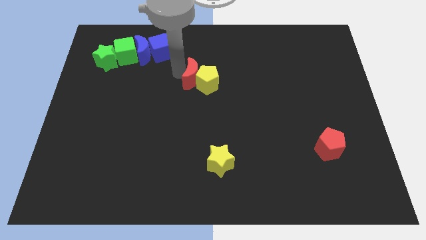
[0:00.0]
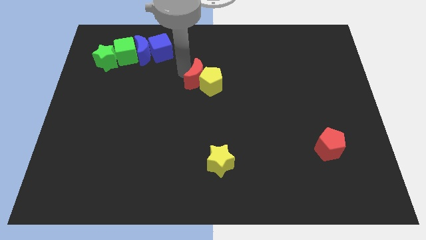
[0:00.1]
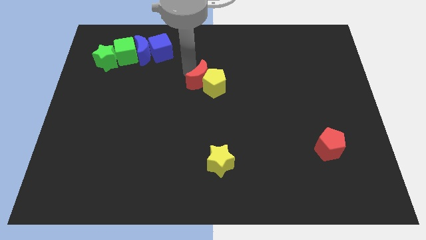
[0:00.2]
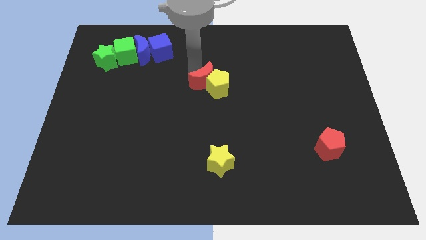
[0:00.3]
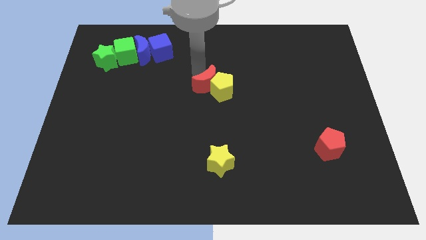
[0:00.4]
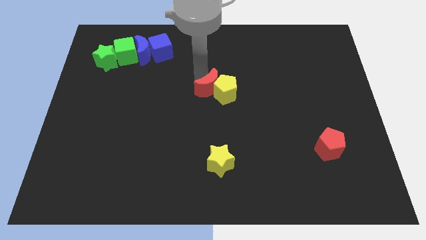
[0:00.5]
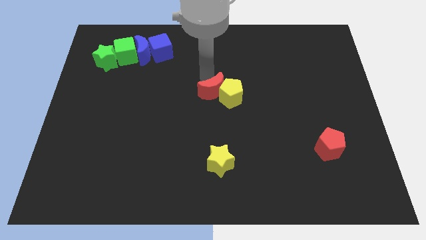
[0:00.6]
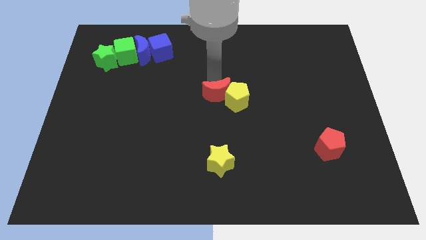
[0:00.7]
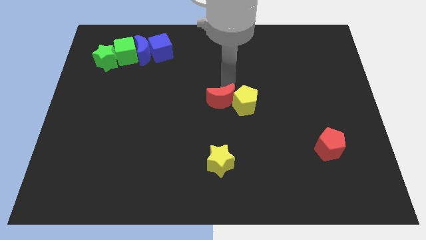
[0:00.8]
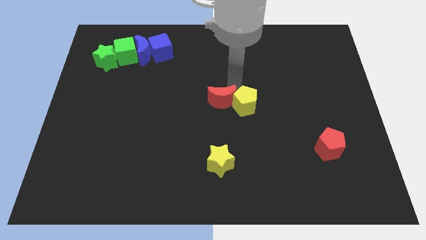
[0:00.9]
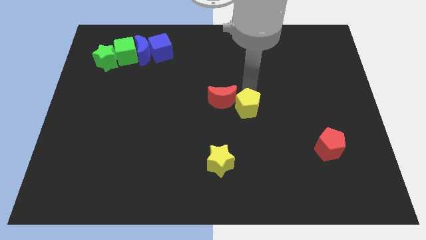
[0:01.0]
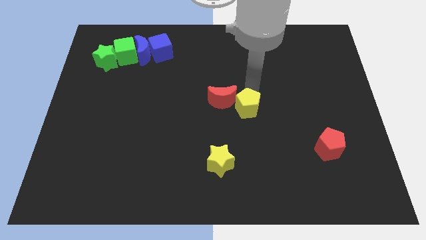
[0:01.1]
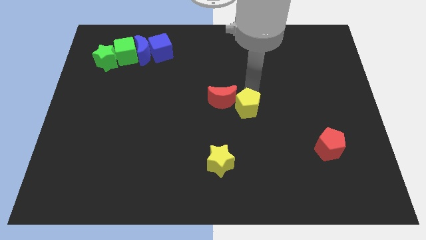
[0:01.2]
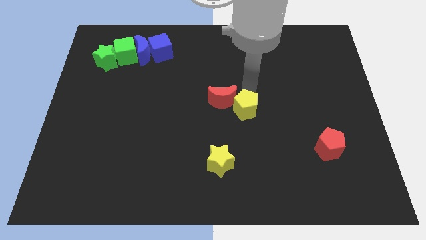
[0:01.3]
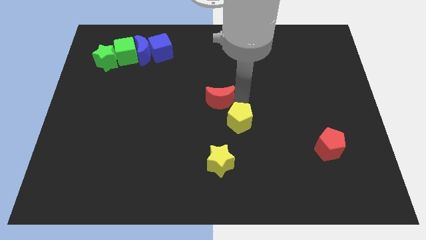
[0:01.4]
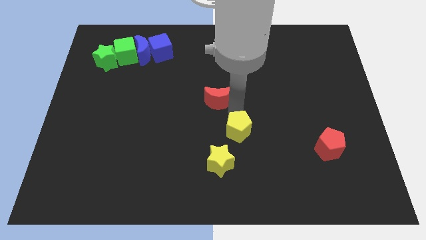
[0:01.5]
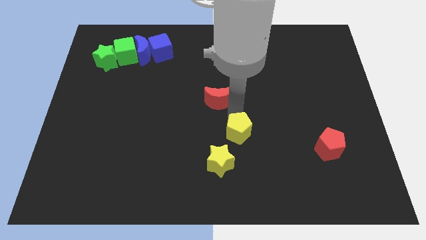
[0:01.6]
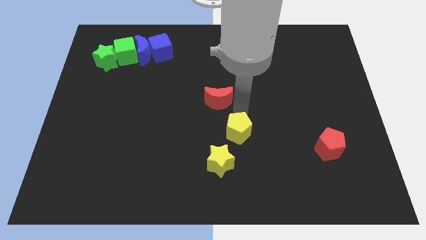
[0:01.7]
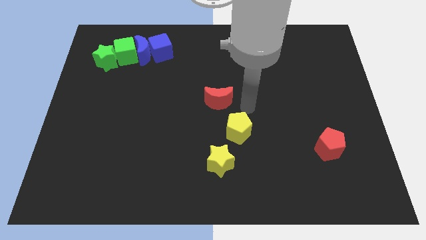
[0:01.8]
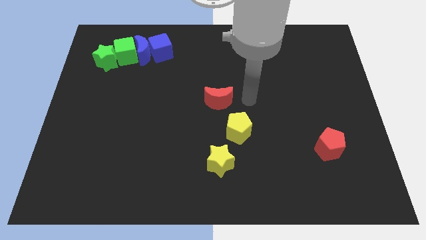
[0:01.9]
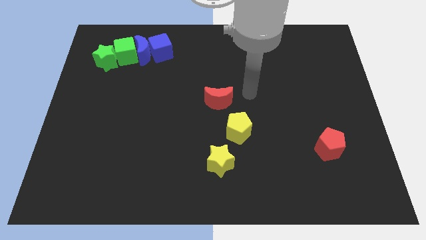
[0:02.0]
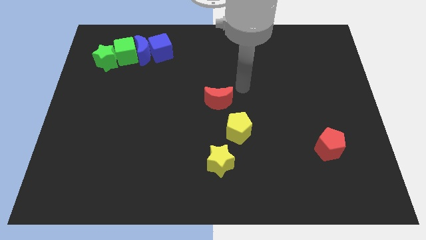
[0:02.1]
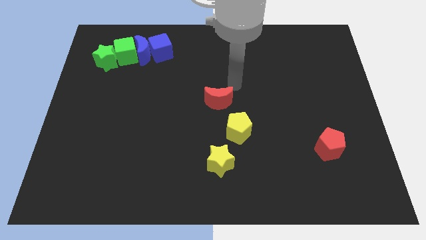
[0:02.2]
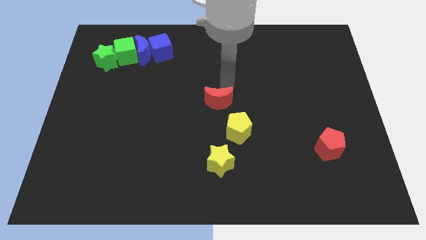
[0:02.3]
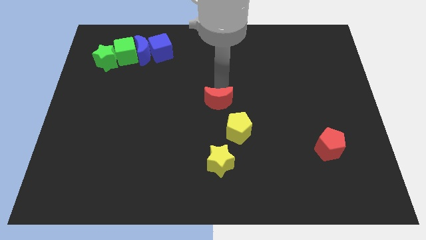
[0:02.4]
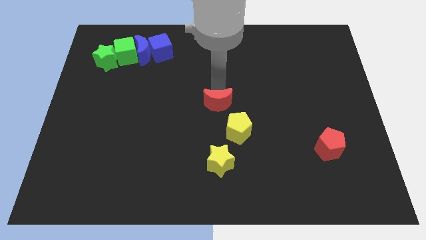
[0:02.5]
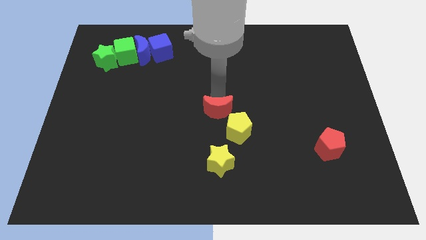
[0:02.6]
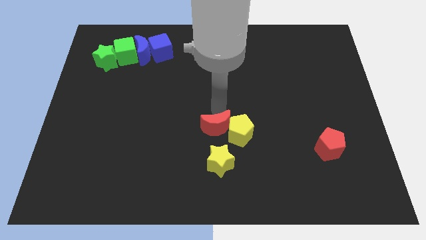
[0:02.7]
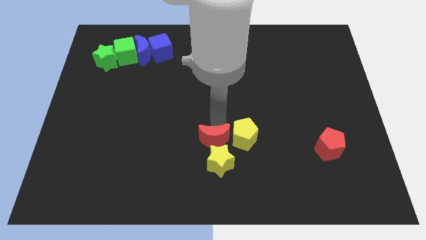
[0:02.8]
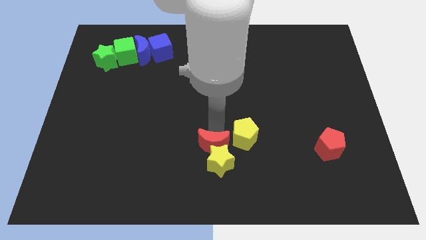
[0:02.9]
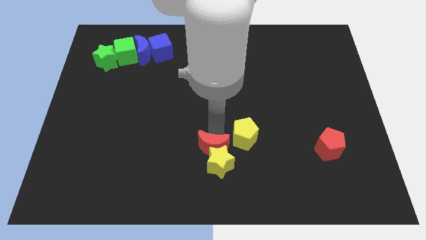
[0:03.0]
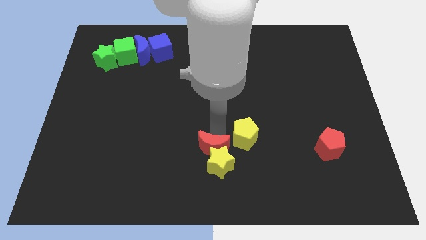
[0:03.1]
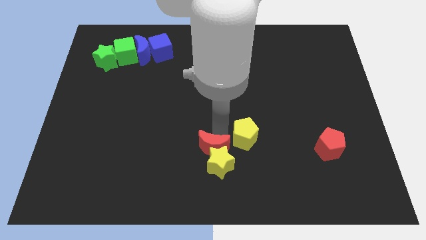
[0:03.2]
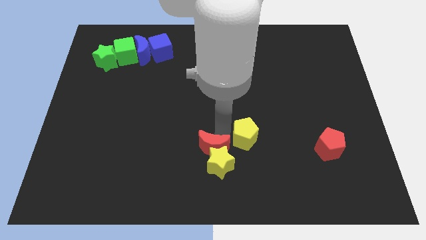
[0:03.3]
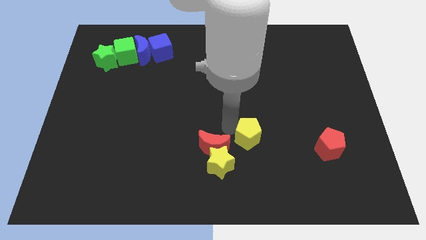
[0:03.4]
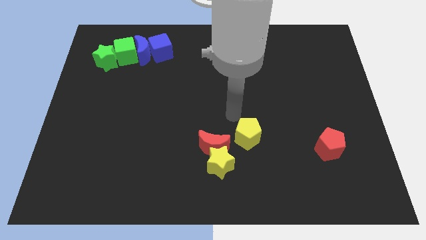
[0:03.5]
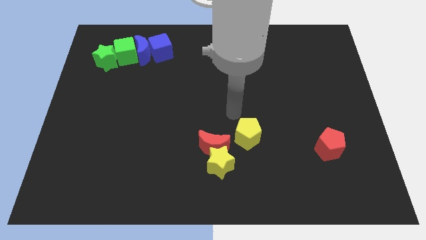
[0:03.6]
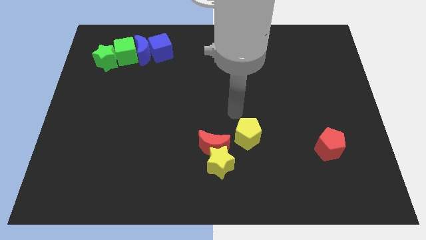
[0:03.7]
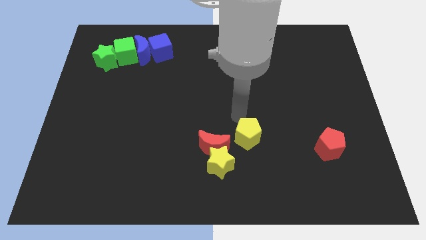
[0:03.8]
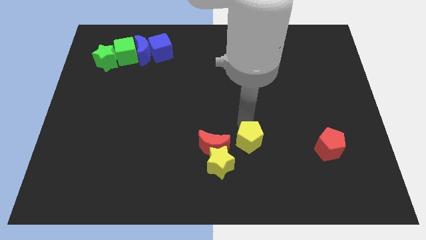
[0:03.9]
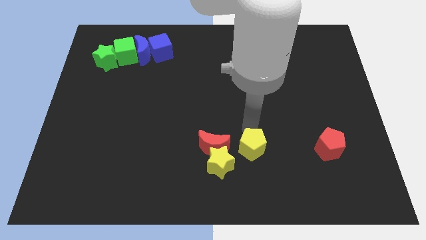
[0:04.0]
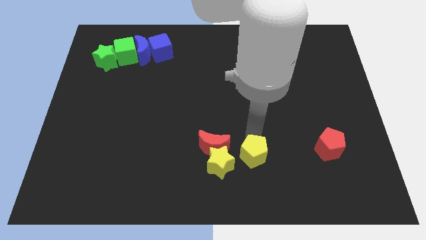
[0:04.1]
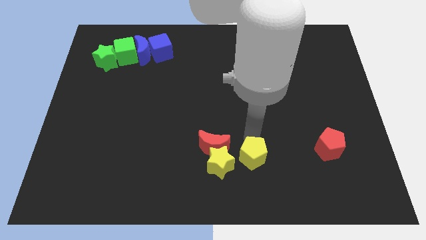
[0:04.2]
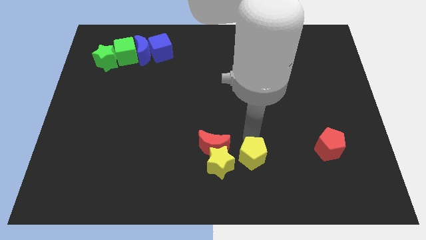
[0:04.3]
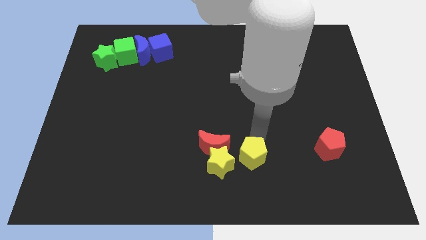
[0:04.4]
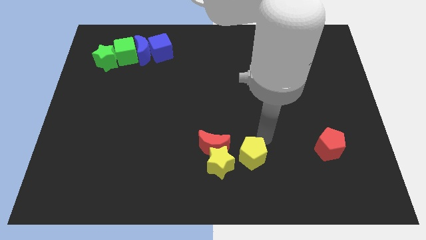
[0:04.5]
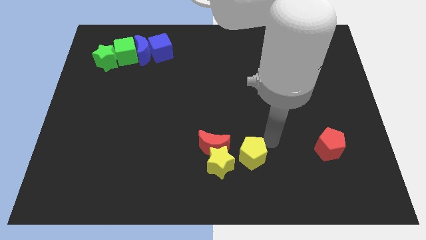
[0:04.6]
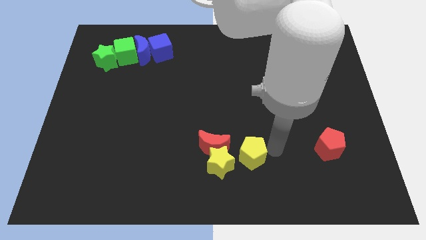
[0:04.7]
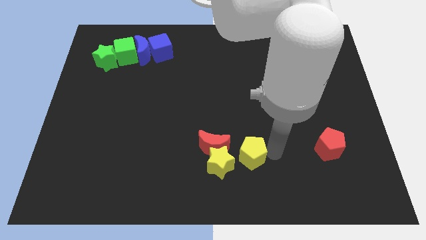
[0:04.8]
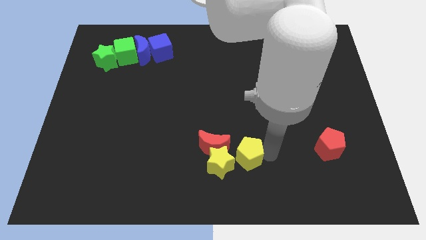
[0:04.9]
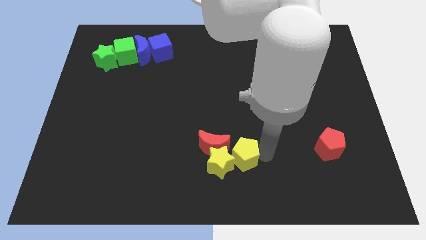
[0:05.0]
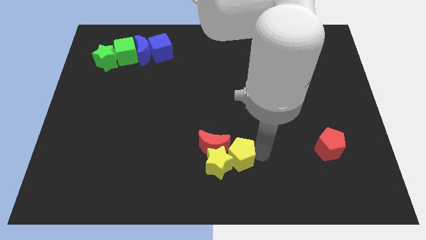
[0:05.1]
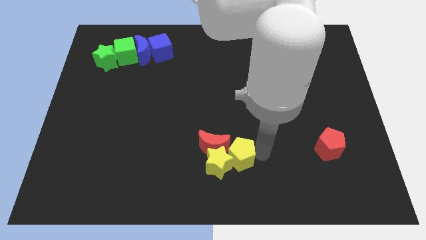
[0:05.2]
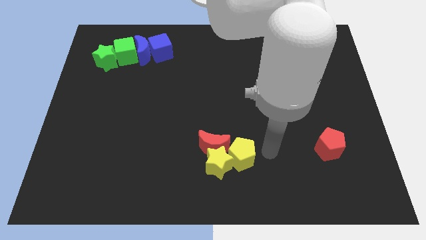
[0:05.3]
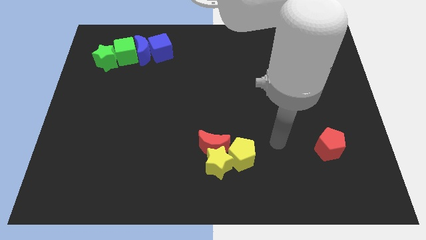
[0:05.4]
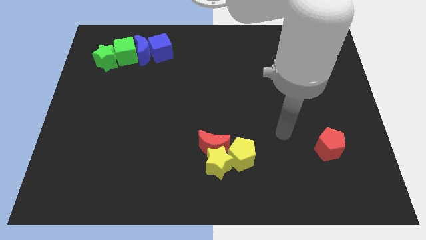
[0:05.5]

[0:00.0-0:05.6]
move the red crescent and yellow pentagon into the yellow star

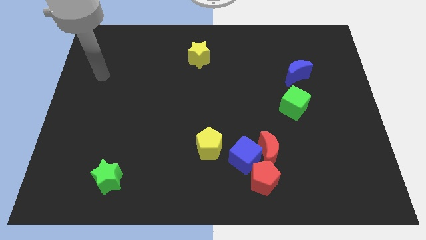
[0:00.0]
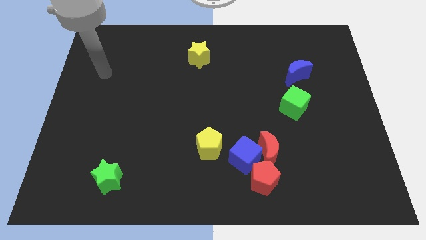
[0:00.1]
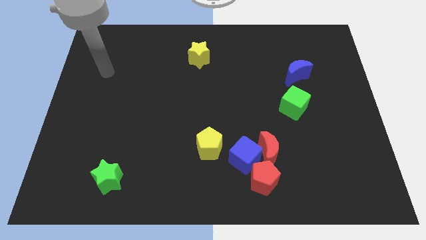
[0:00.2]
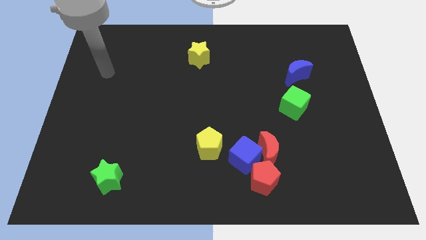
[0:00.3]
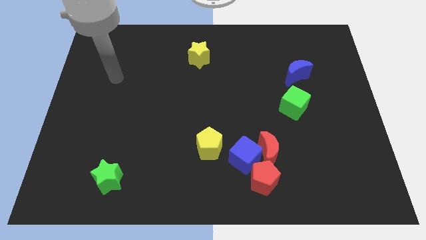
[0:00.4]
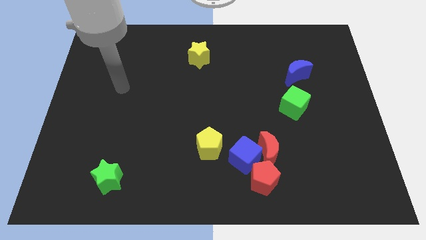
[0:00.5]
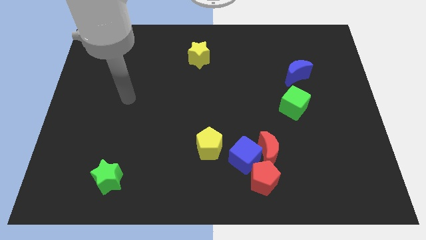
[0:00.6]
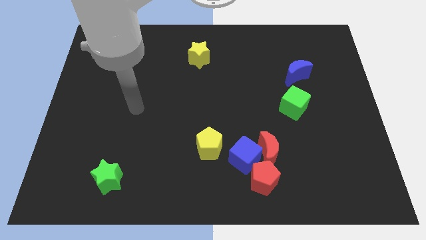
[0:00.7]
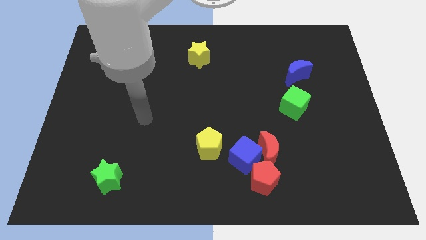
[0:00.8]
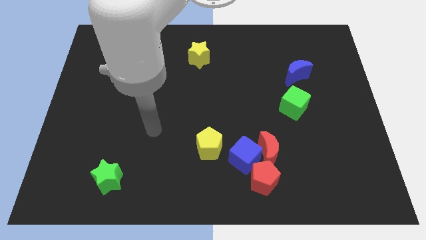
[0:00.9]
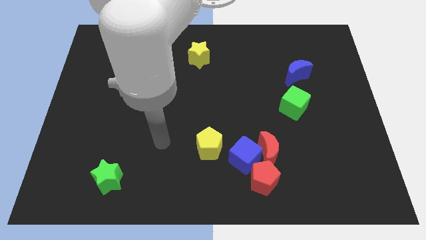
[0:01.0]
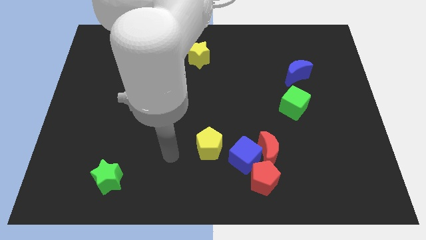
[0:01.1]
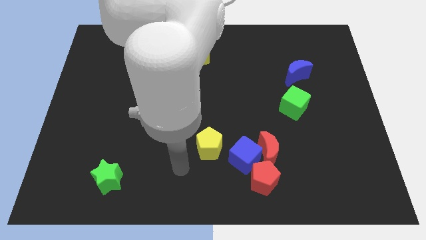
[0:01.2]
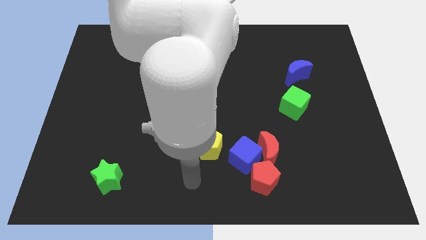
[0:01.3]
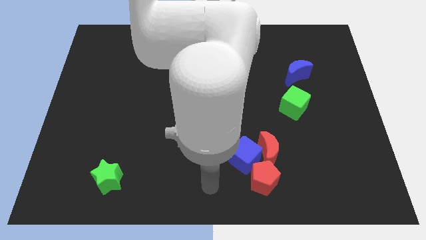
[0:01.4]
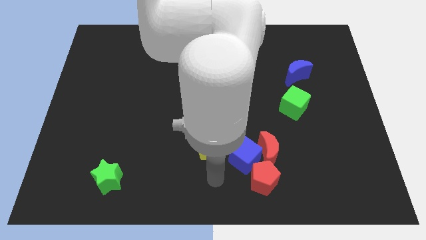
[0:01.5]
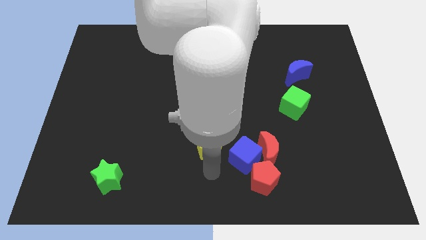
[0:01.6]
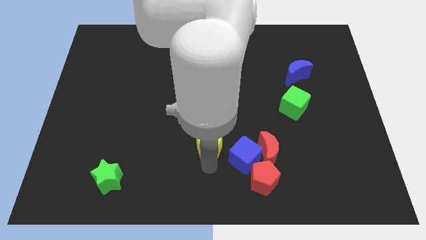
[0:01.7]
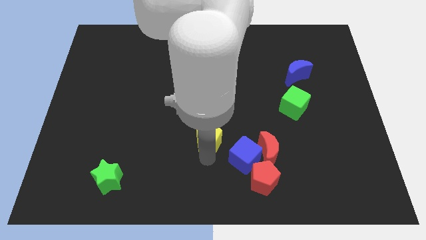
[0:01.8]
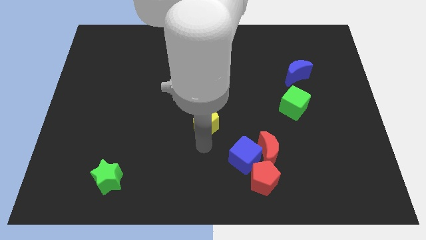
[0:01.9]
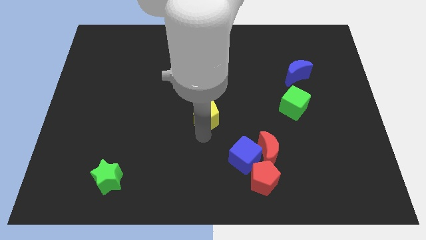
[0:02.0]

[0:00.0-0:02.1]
push the yellow pentagon towards the center of the board

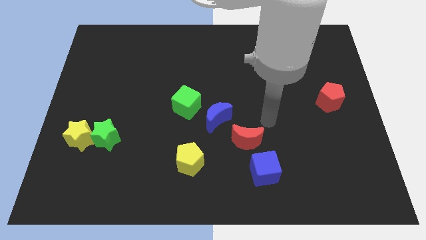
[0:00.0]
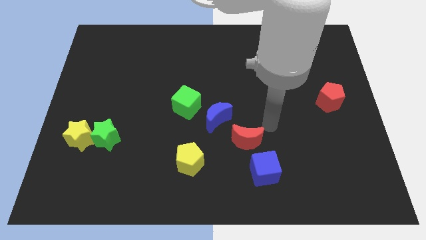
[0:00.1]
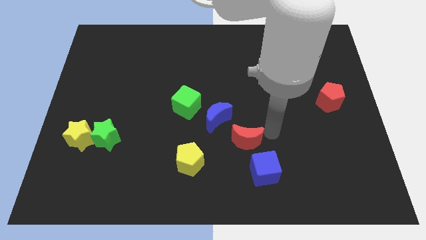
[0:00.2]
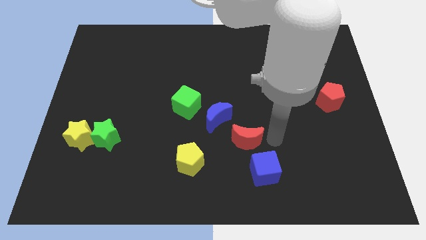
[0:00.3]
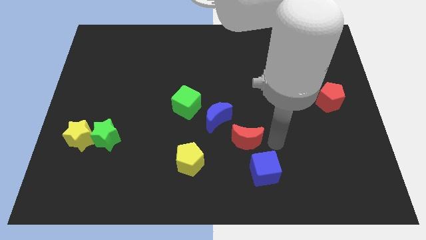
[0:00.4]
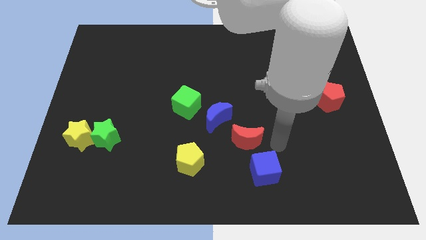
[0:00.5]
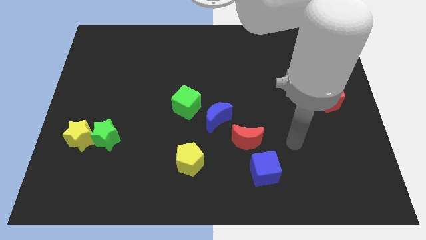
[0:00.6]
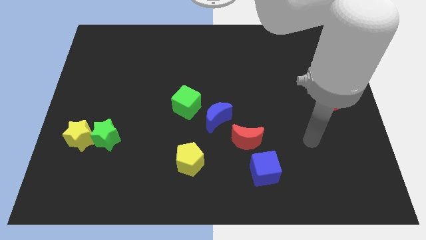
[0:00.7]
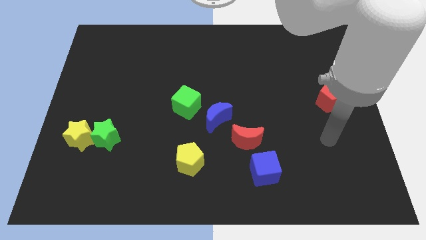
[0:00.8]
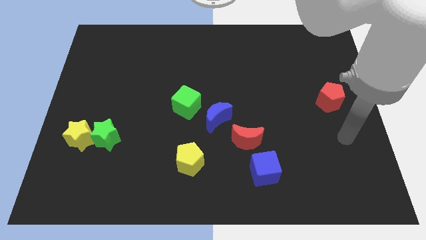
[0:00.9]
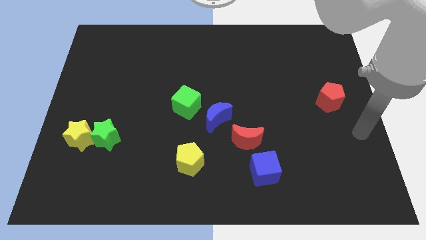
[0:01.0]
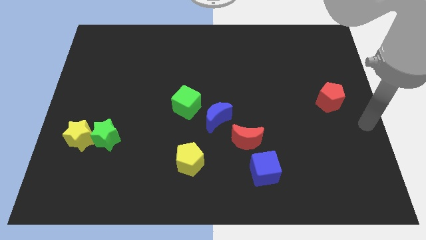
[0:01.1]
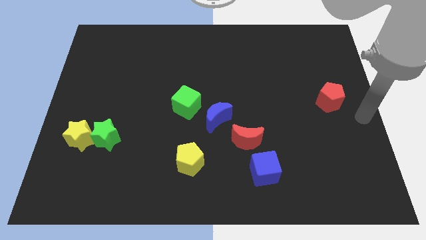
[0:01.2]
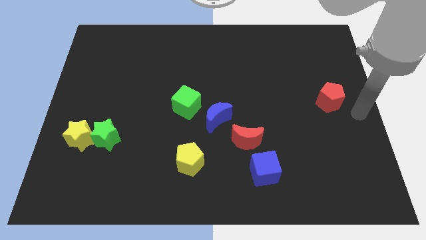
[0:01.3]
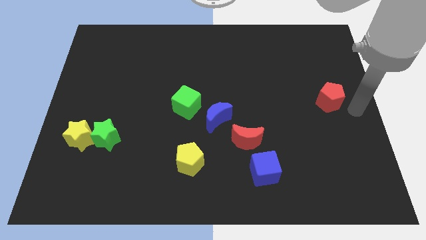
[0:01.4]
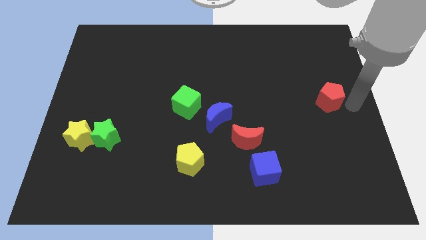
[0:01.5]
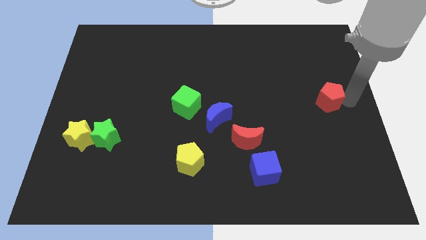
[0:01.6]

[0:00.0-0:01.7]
point your arm to the right side of the red pentagon
